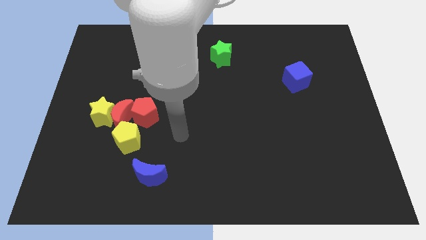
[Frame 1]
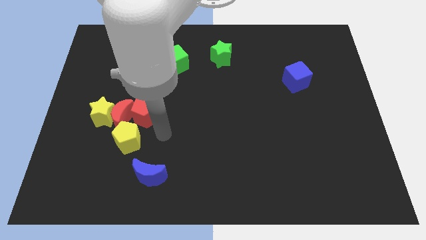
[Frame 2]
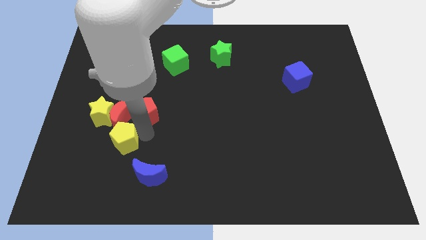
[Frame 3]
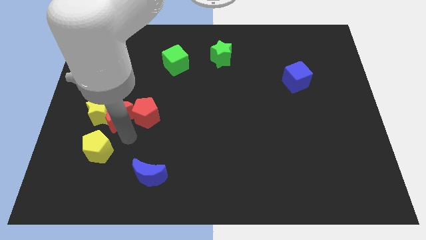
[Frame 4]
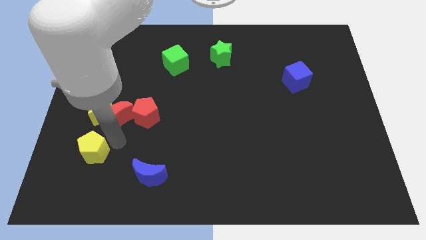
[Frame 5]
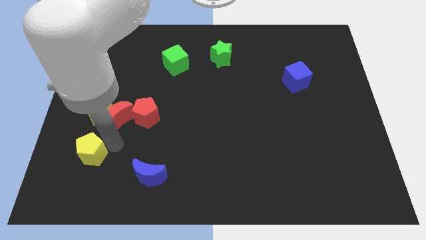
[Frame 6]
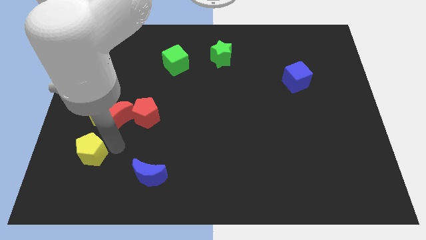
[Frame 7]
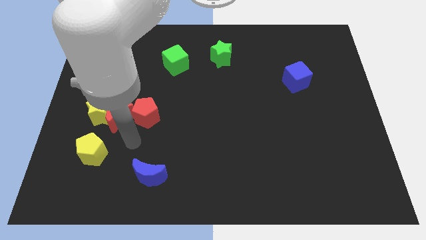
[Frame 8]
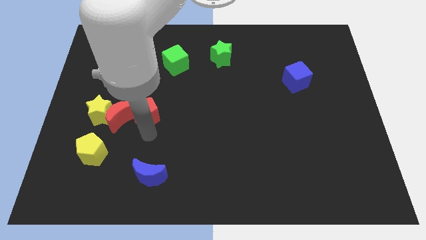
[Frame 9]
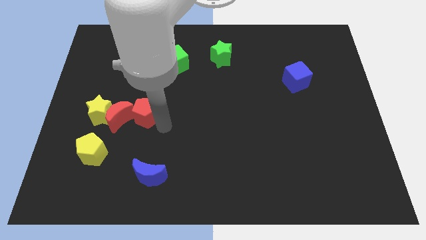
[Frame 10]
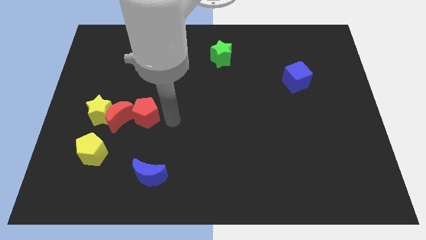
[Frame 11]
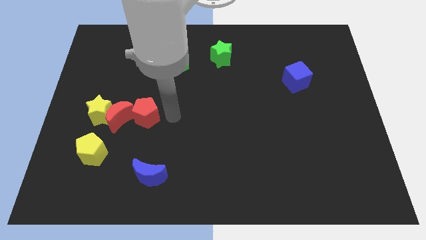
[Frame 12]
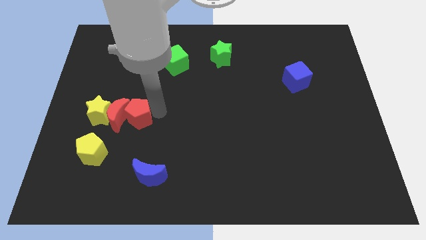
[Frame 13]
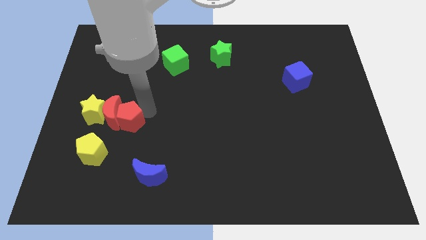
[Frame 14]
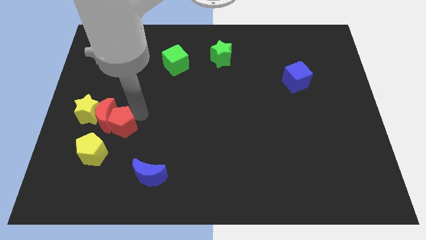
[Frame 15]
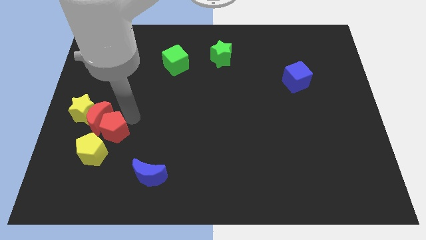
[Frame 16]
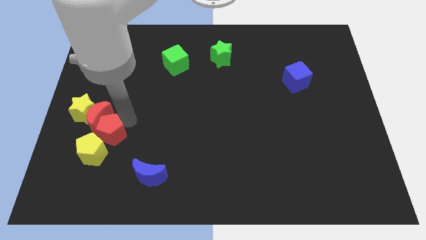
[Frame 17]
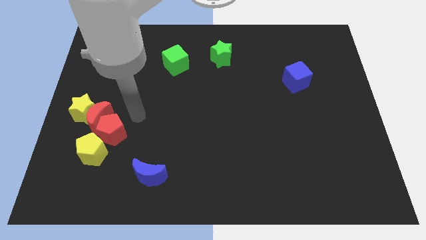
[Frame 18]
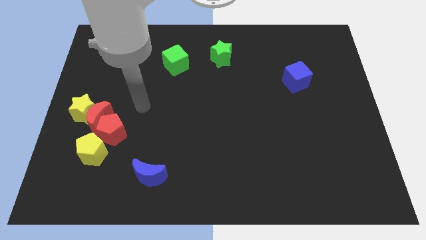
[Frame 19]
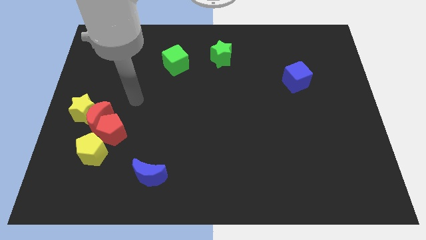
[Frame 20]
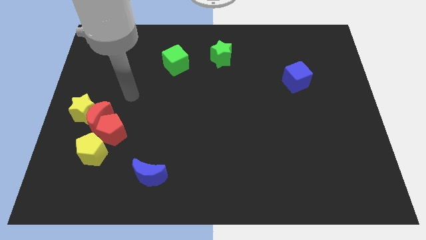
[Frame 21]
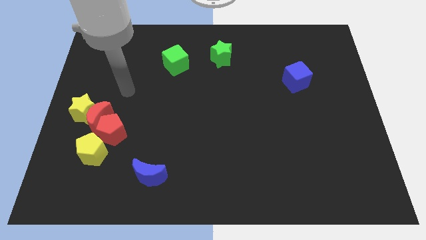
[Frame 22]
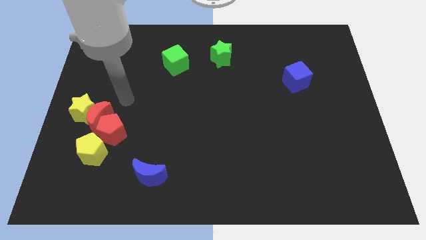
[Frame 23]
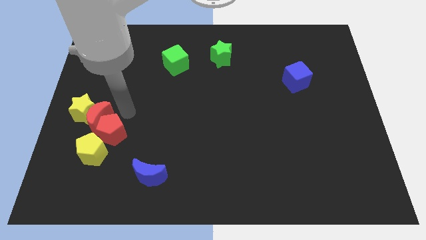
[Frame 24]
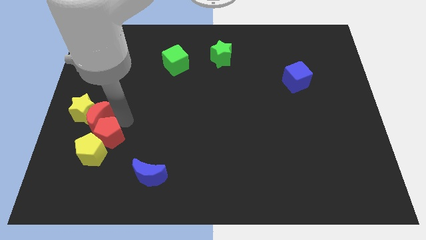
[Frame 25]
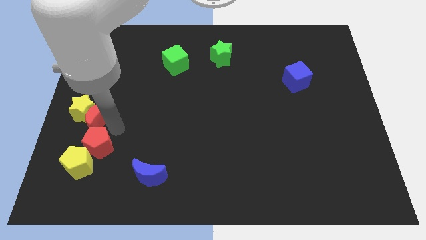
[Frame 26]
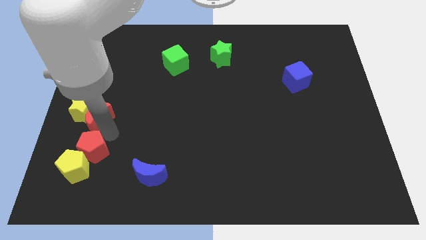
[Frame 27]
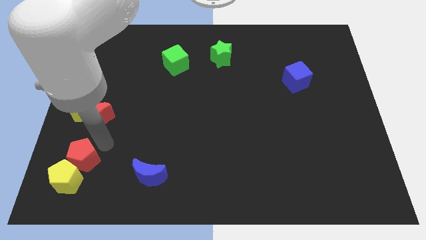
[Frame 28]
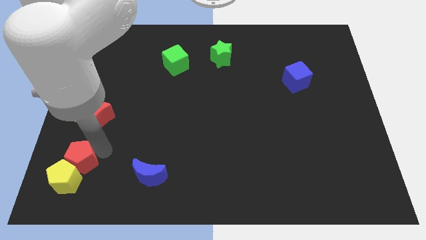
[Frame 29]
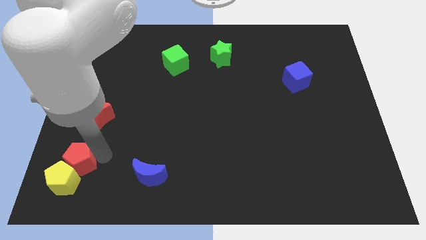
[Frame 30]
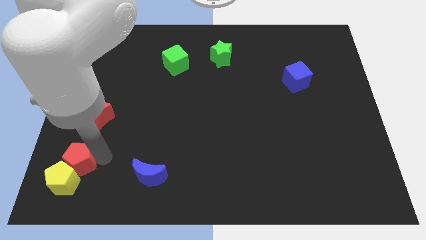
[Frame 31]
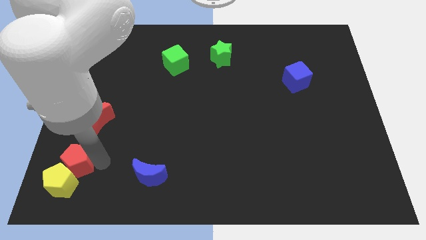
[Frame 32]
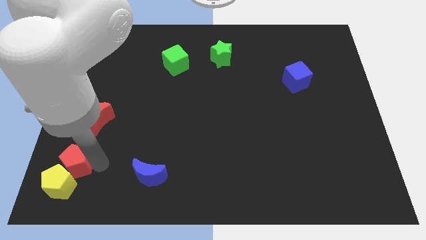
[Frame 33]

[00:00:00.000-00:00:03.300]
push red pentagon along with yellow pentagon to the bottom left

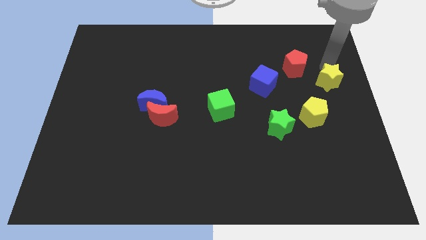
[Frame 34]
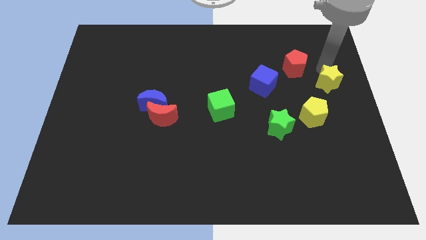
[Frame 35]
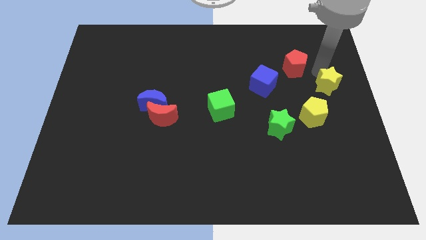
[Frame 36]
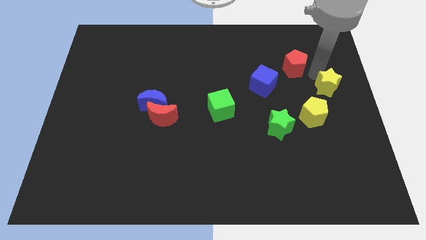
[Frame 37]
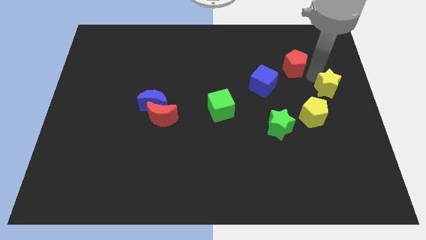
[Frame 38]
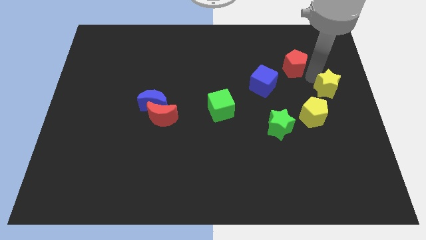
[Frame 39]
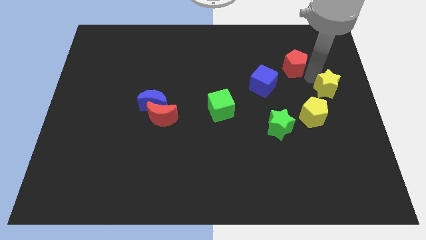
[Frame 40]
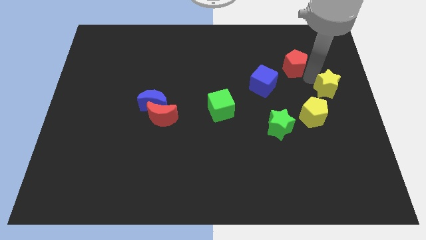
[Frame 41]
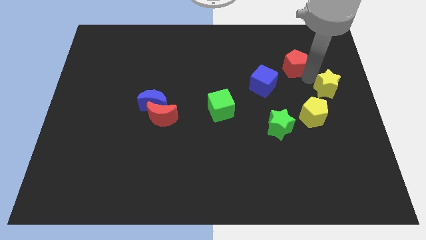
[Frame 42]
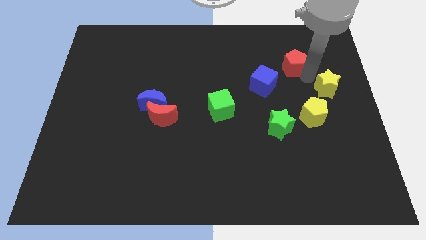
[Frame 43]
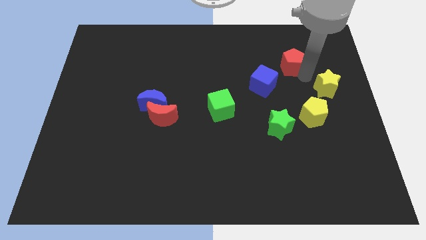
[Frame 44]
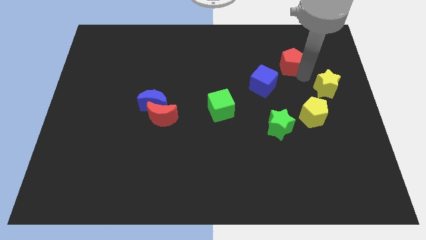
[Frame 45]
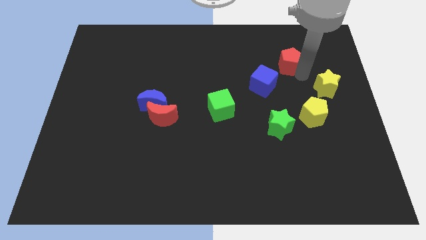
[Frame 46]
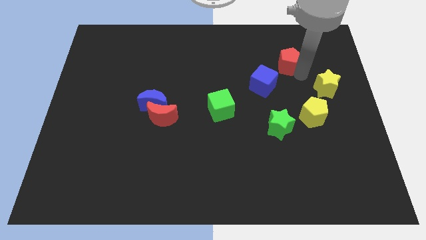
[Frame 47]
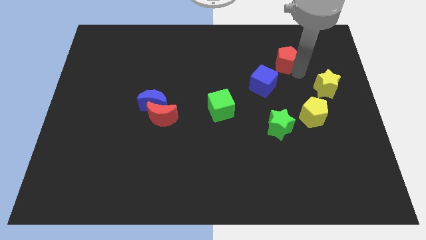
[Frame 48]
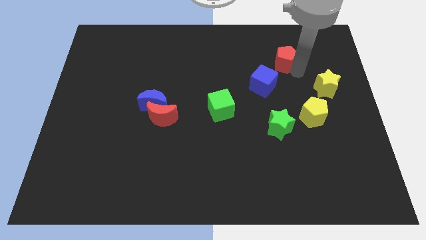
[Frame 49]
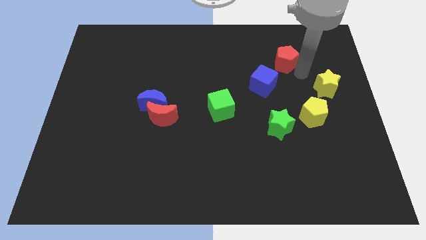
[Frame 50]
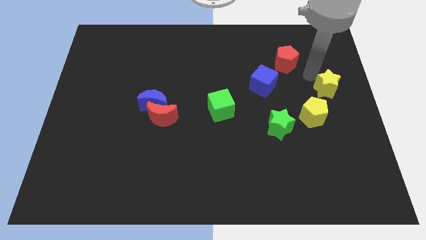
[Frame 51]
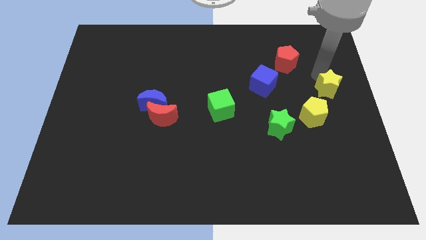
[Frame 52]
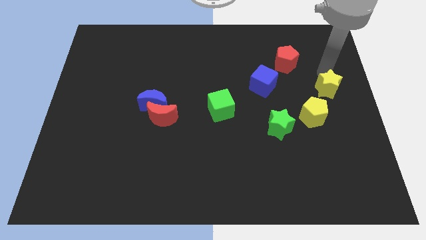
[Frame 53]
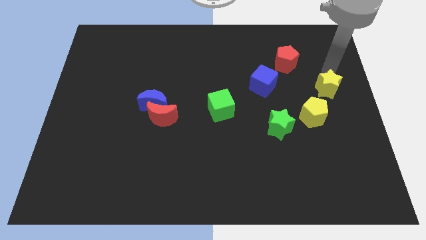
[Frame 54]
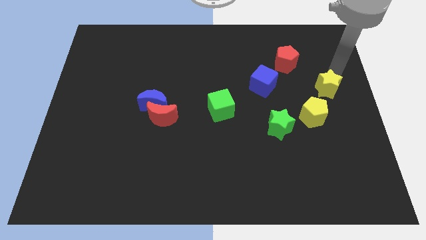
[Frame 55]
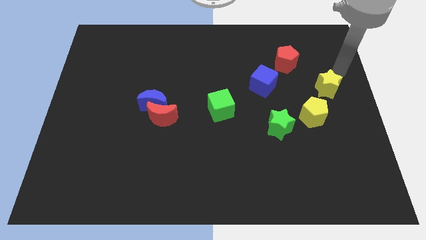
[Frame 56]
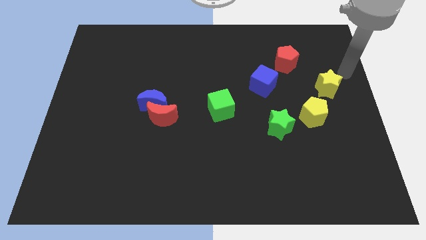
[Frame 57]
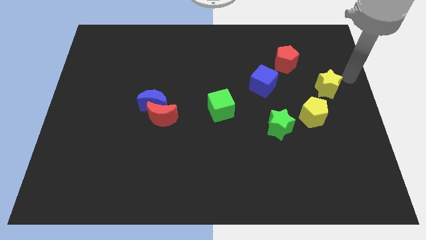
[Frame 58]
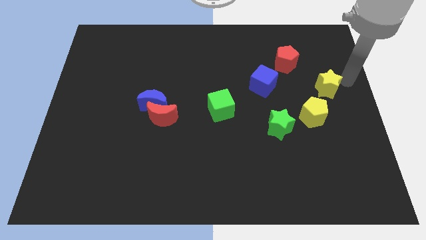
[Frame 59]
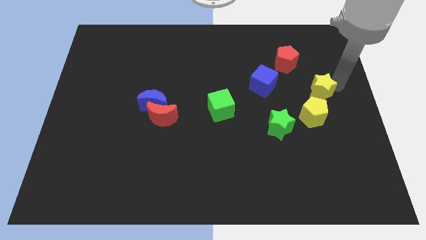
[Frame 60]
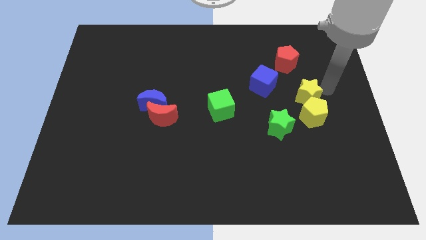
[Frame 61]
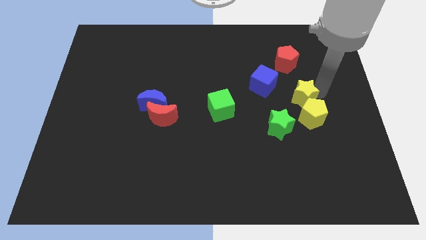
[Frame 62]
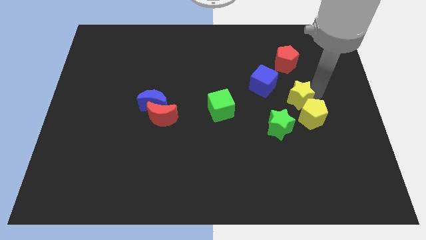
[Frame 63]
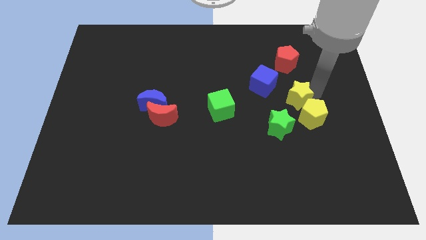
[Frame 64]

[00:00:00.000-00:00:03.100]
place the red pentagon diagonally to the blue cube

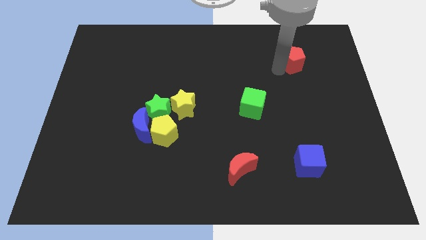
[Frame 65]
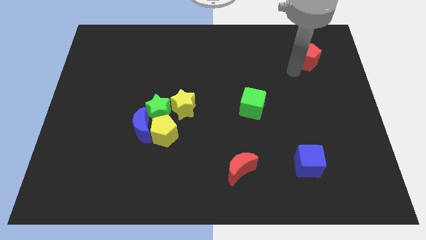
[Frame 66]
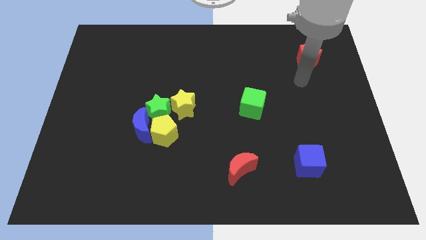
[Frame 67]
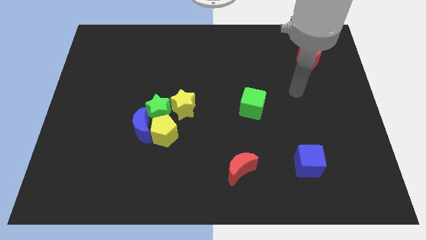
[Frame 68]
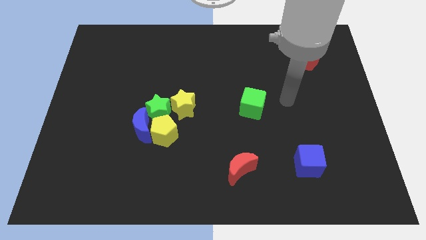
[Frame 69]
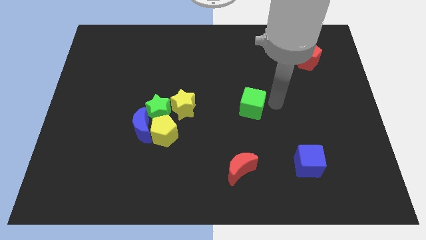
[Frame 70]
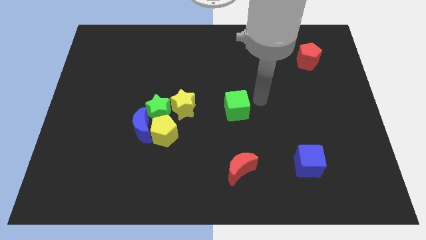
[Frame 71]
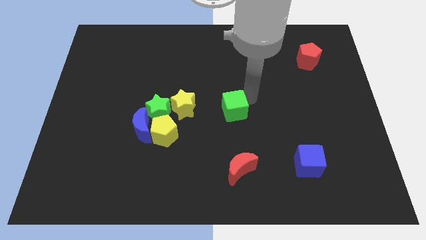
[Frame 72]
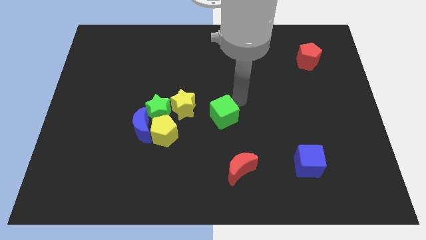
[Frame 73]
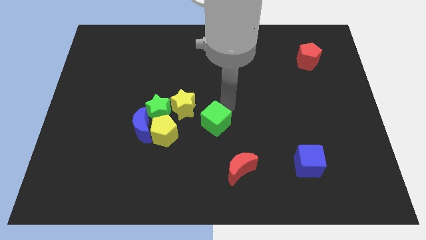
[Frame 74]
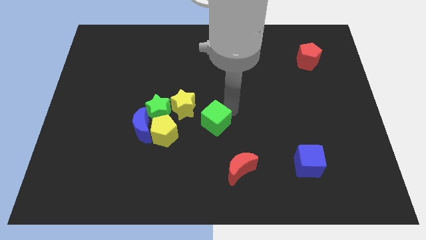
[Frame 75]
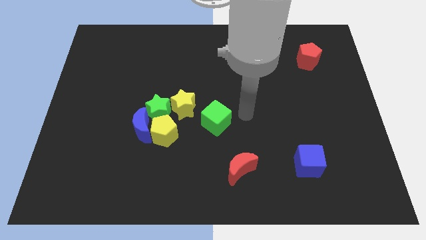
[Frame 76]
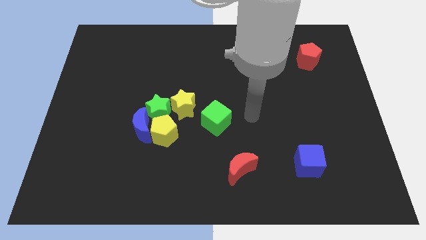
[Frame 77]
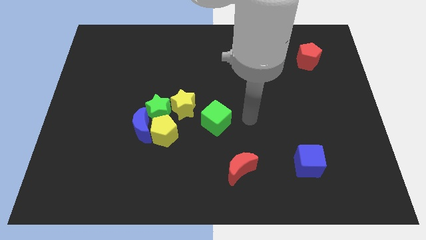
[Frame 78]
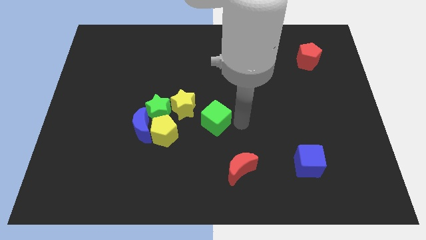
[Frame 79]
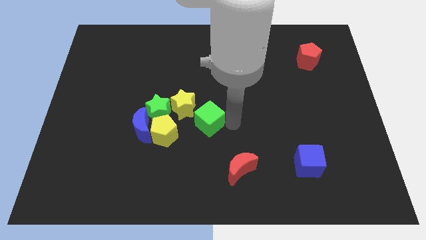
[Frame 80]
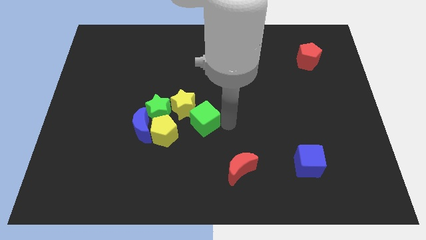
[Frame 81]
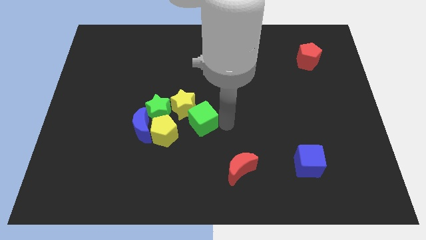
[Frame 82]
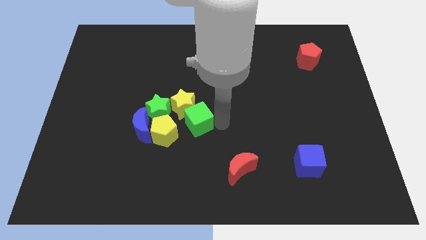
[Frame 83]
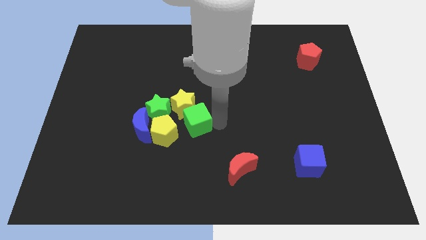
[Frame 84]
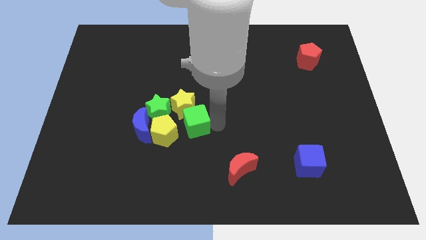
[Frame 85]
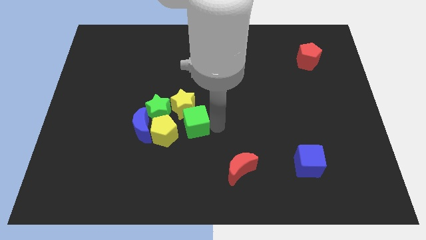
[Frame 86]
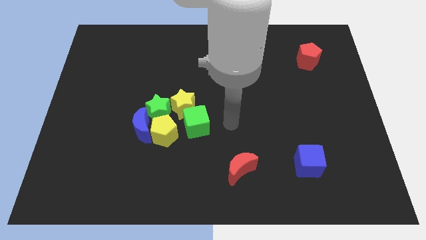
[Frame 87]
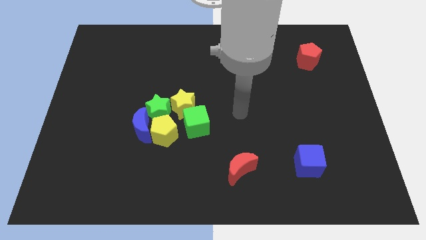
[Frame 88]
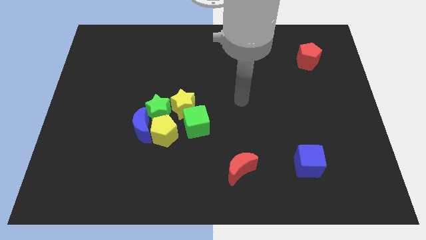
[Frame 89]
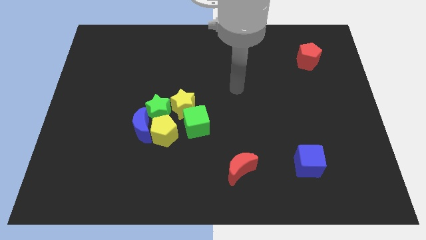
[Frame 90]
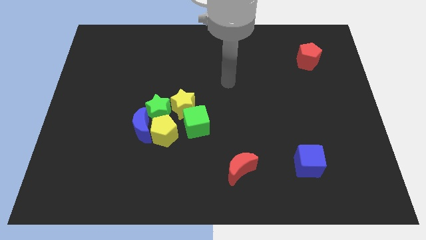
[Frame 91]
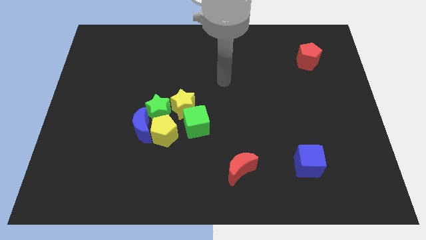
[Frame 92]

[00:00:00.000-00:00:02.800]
place the green cube below the yellow star
